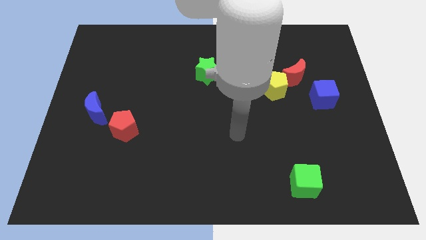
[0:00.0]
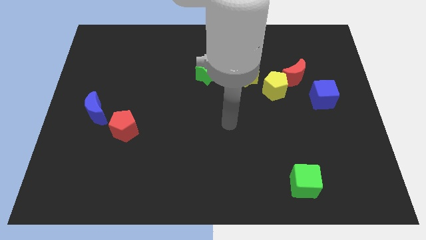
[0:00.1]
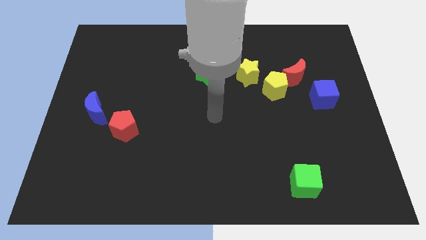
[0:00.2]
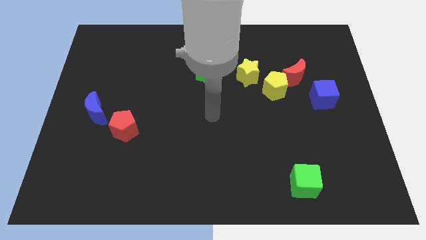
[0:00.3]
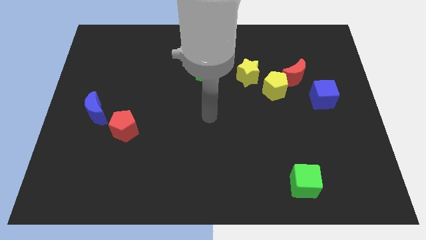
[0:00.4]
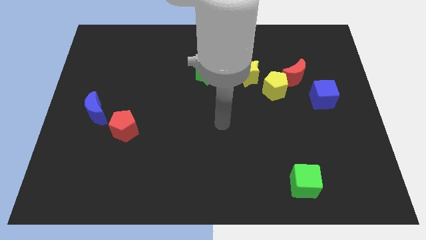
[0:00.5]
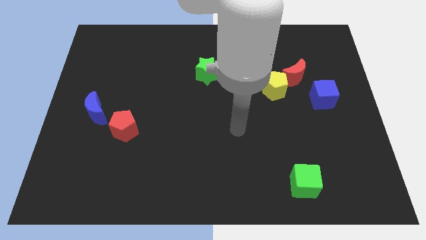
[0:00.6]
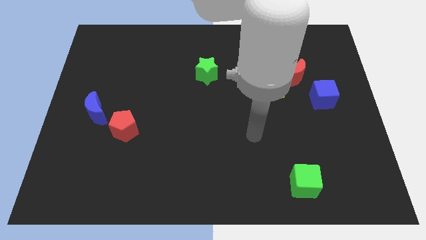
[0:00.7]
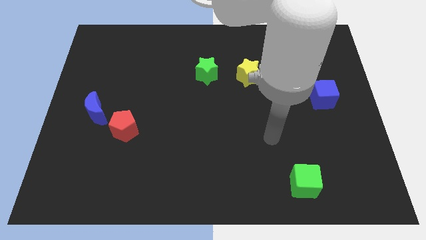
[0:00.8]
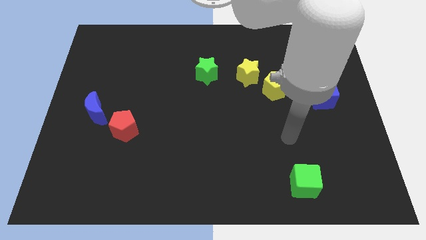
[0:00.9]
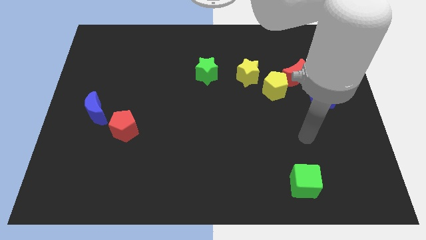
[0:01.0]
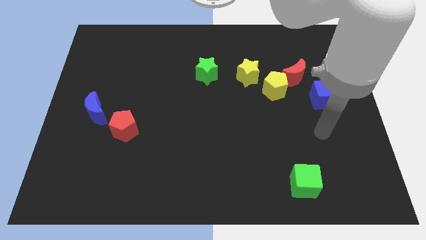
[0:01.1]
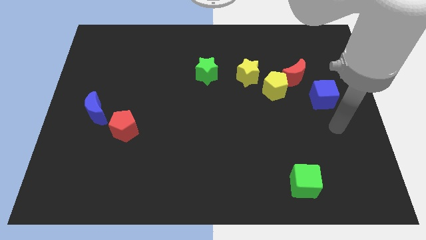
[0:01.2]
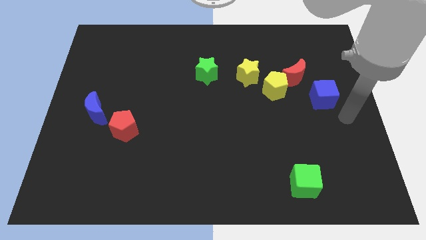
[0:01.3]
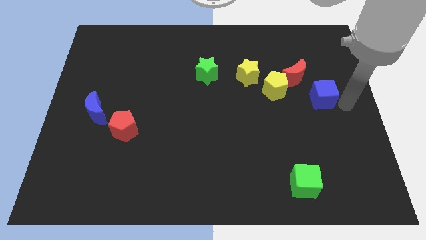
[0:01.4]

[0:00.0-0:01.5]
move the arm towards the blue cube

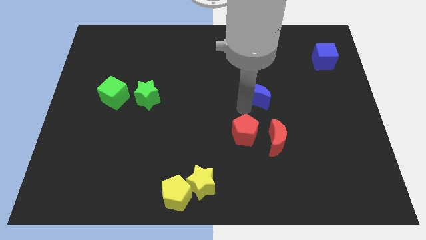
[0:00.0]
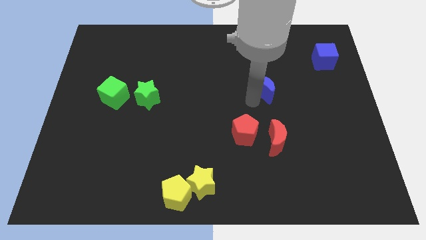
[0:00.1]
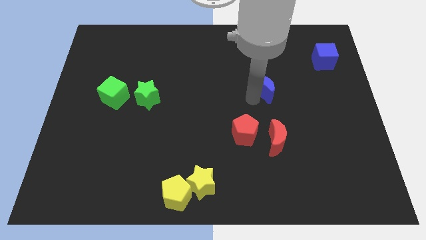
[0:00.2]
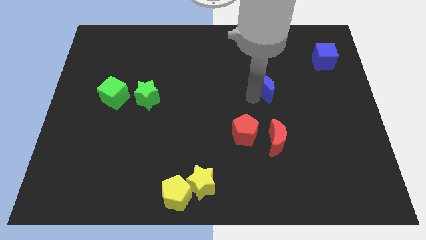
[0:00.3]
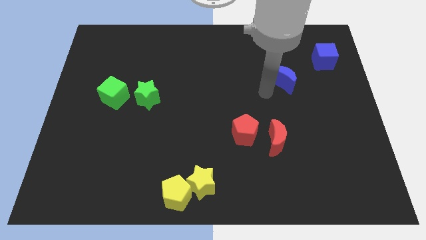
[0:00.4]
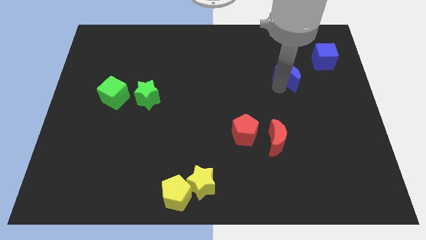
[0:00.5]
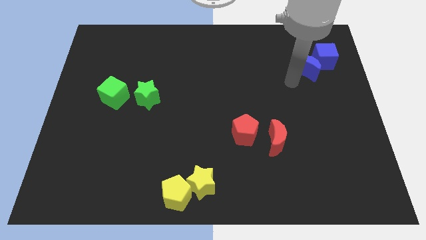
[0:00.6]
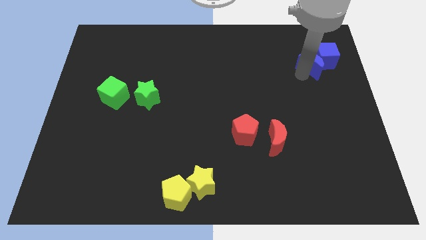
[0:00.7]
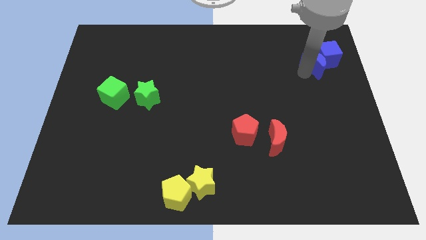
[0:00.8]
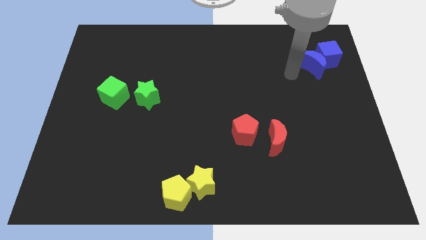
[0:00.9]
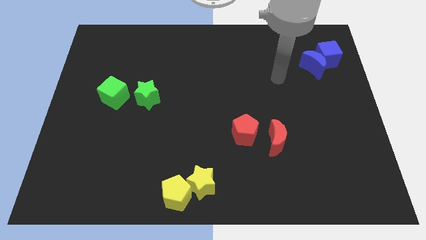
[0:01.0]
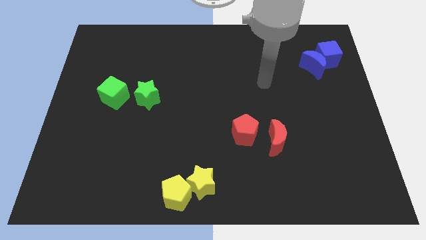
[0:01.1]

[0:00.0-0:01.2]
push the blue moon into the blue cube

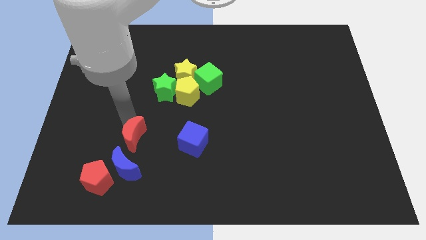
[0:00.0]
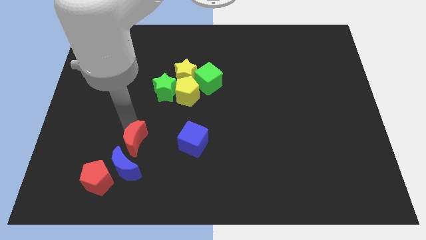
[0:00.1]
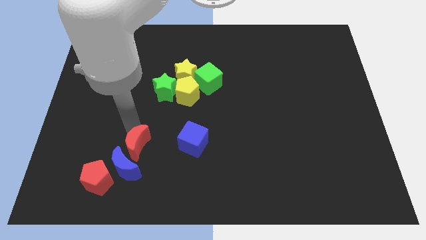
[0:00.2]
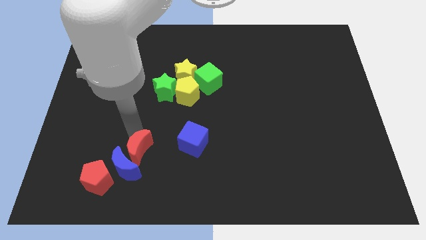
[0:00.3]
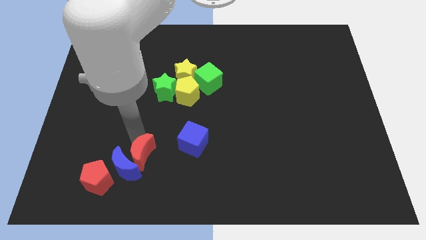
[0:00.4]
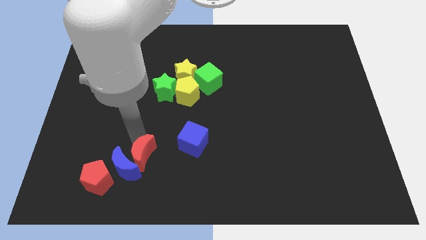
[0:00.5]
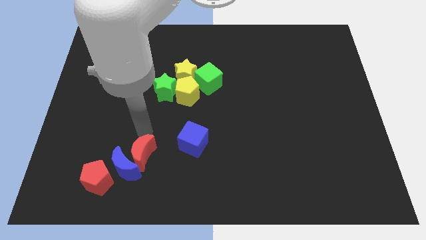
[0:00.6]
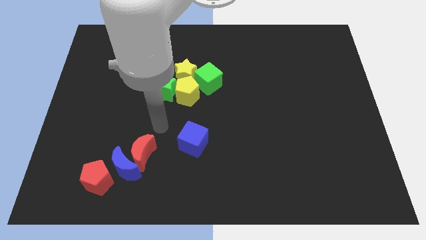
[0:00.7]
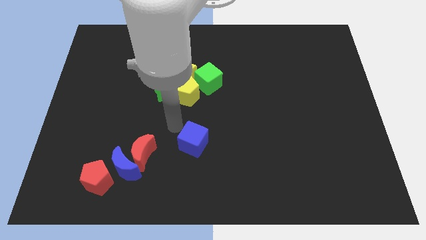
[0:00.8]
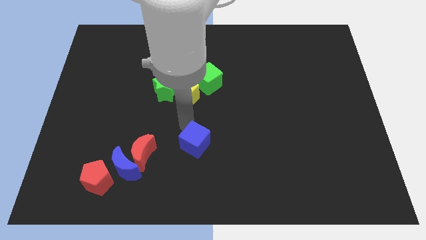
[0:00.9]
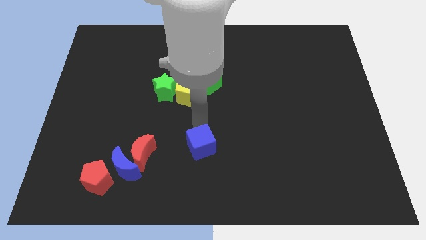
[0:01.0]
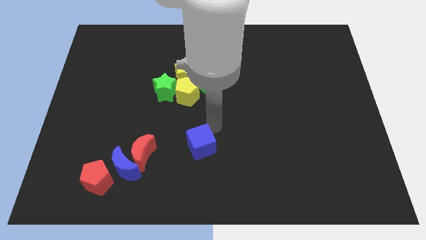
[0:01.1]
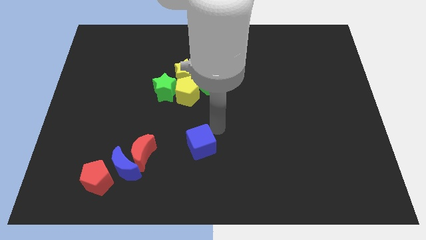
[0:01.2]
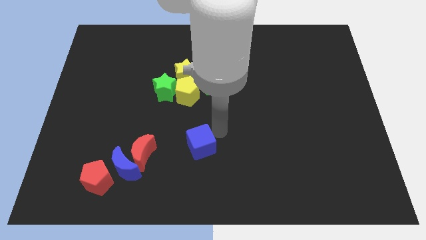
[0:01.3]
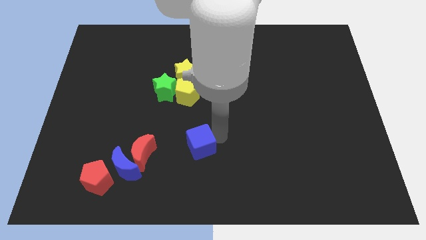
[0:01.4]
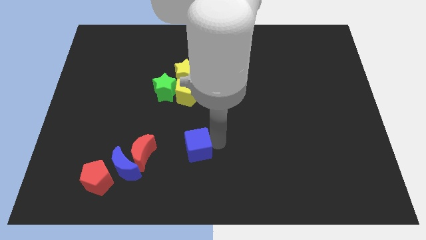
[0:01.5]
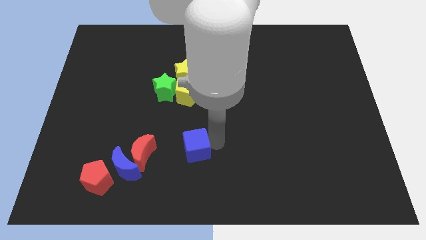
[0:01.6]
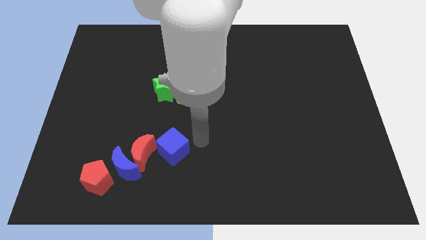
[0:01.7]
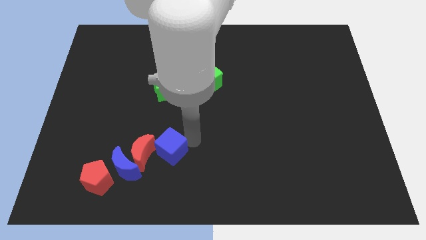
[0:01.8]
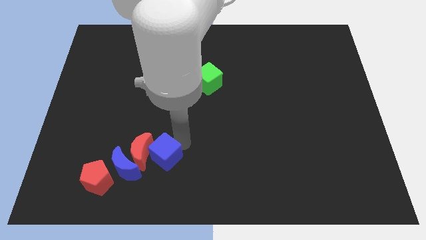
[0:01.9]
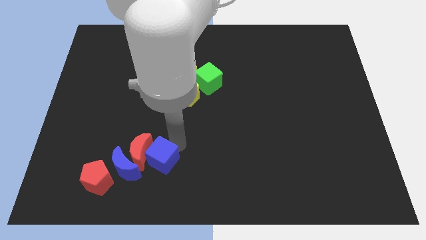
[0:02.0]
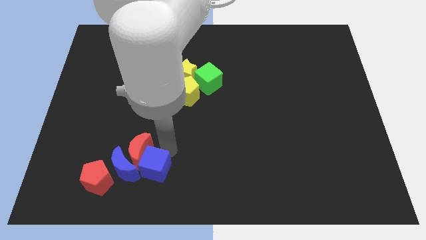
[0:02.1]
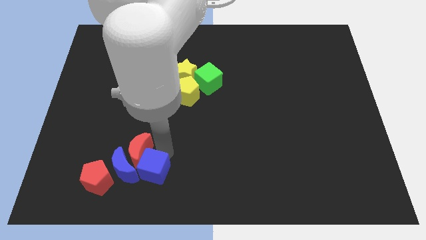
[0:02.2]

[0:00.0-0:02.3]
move the blue cube into the red moon

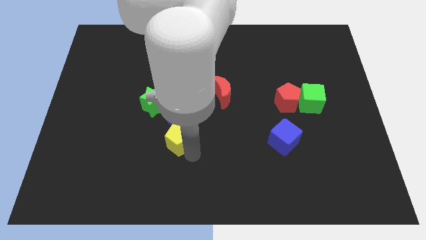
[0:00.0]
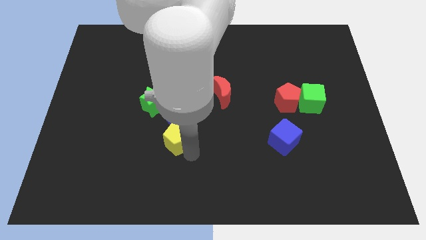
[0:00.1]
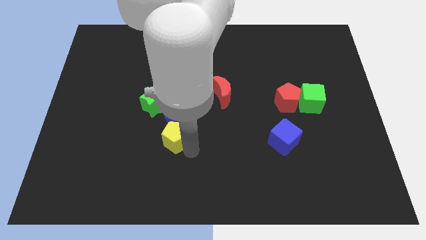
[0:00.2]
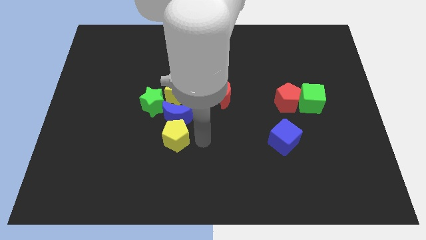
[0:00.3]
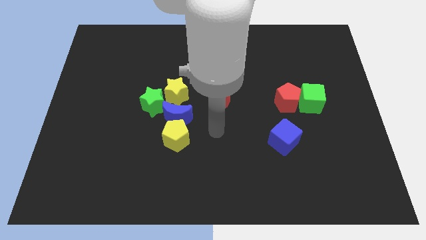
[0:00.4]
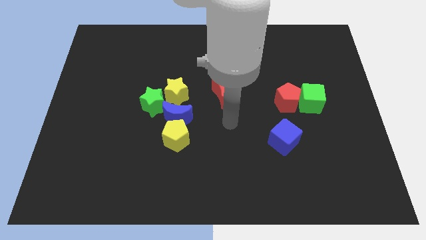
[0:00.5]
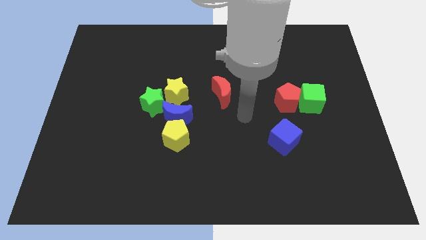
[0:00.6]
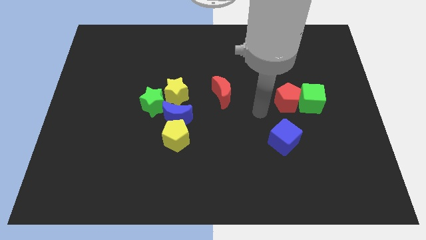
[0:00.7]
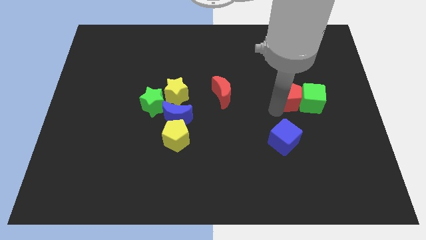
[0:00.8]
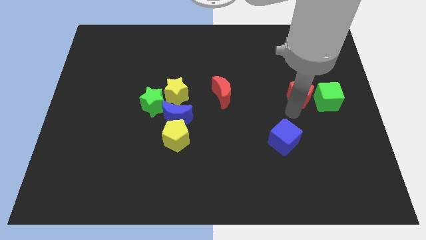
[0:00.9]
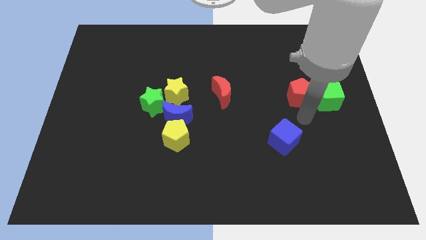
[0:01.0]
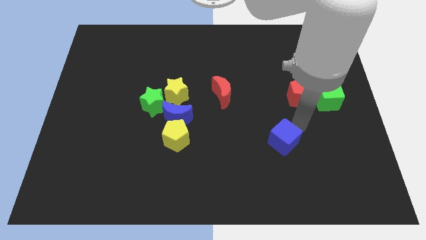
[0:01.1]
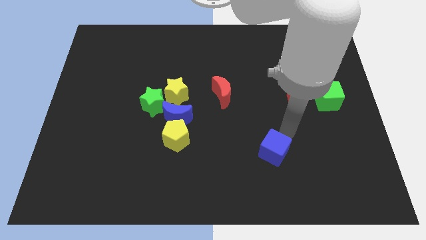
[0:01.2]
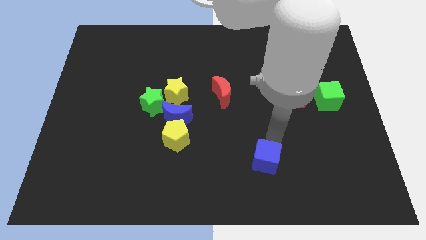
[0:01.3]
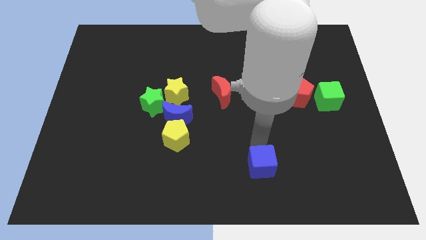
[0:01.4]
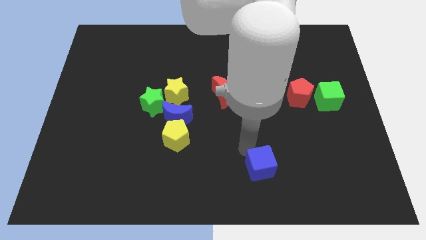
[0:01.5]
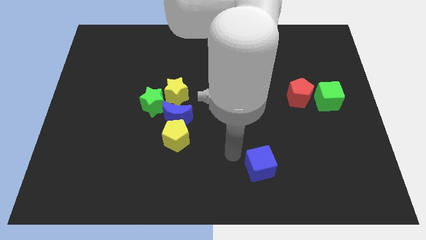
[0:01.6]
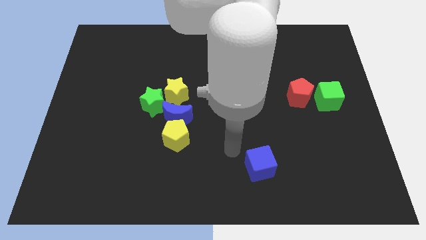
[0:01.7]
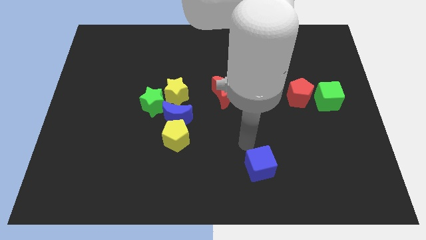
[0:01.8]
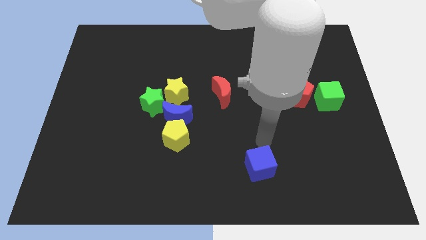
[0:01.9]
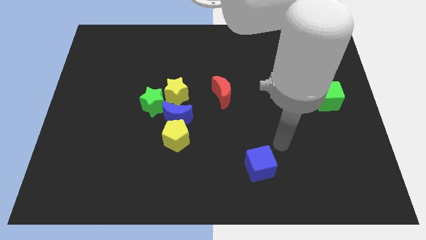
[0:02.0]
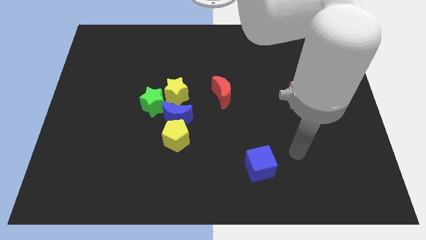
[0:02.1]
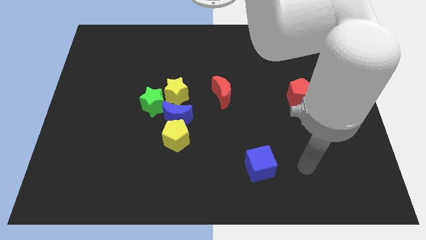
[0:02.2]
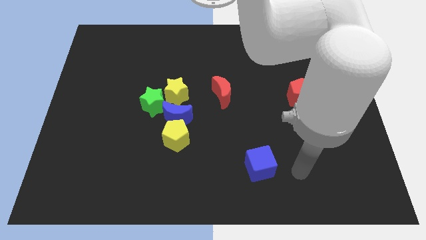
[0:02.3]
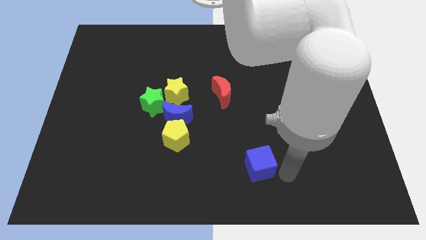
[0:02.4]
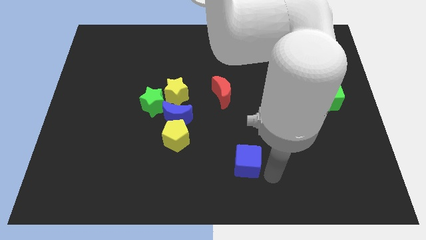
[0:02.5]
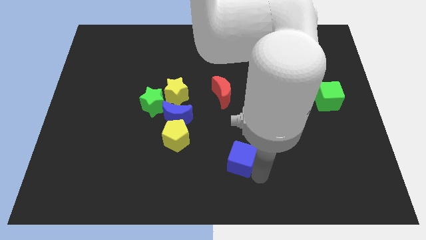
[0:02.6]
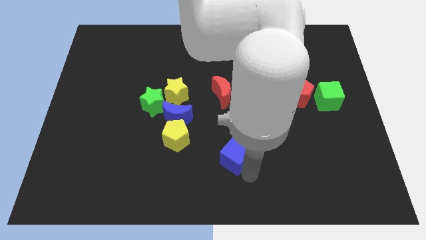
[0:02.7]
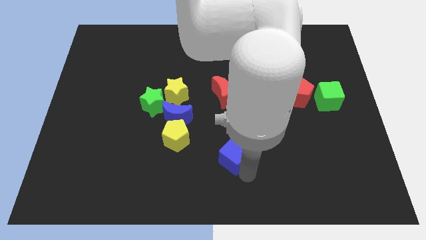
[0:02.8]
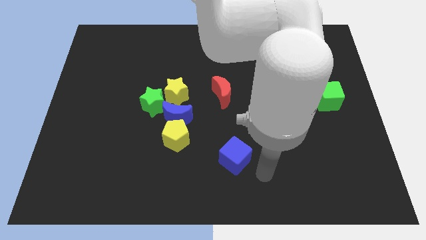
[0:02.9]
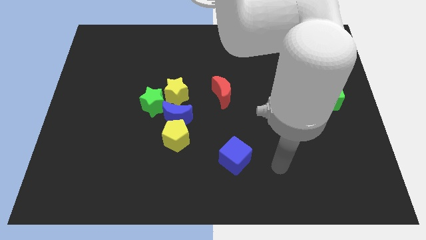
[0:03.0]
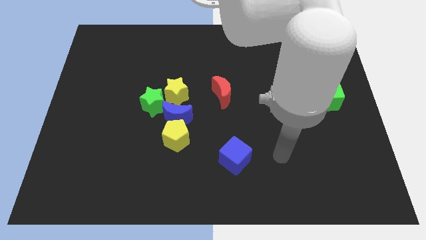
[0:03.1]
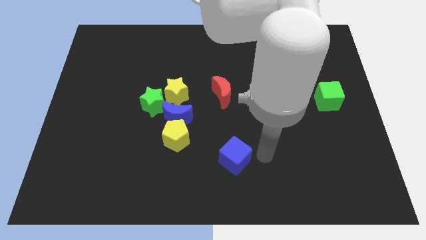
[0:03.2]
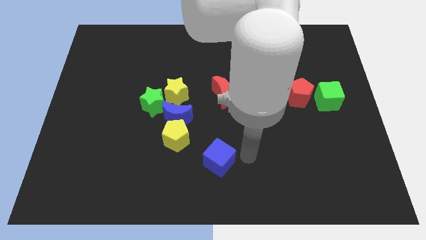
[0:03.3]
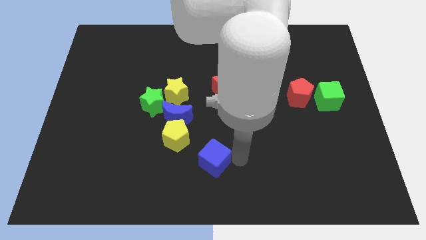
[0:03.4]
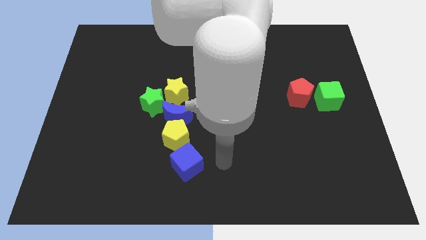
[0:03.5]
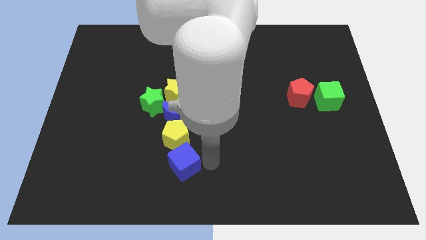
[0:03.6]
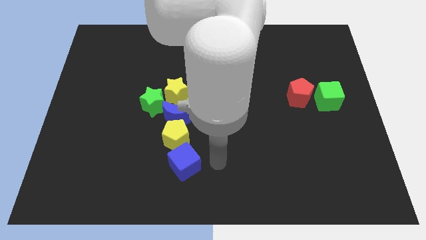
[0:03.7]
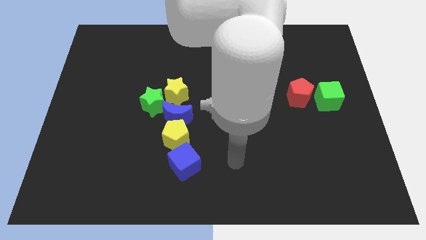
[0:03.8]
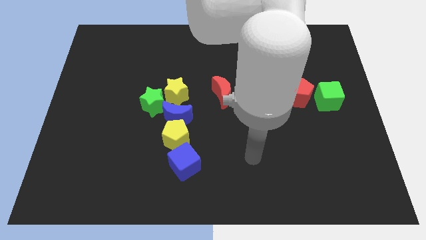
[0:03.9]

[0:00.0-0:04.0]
place the blue cube below the yellow pentagon
